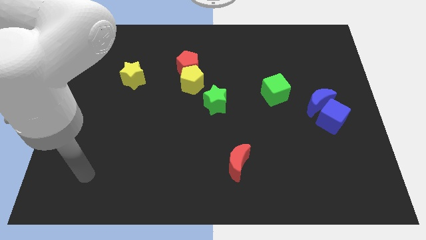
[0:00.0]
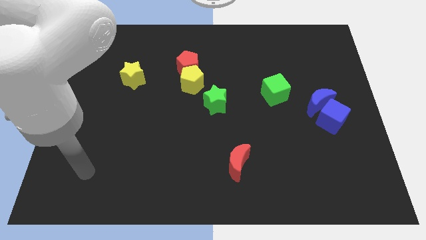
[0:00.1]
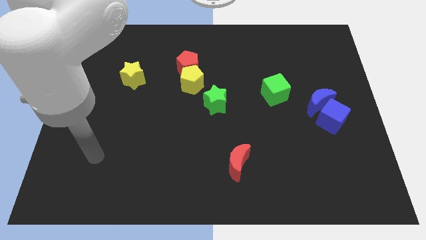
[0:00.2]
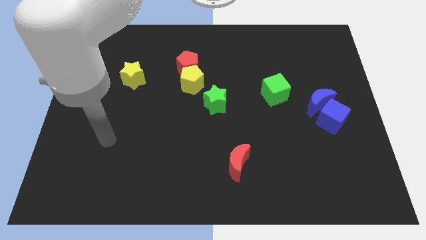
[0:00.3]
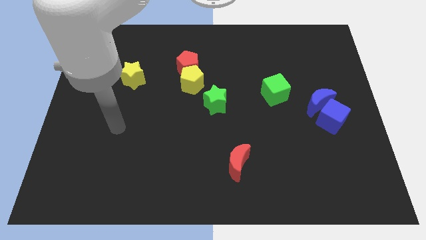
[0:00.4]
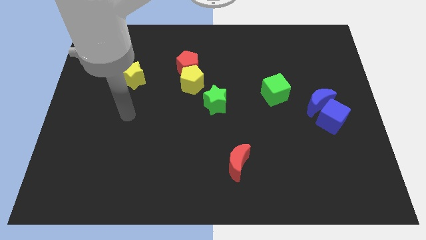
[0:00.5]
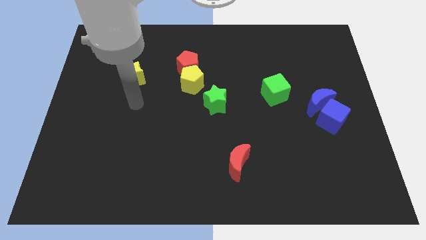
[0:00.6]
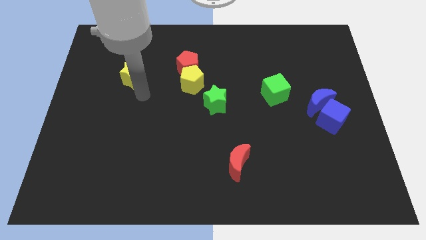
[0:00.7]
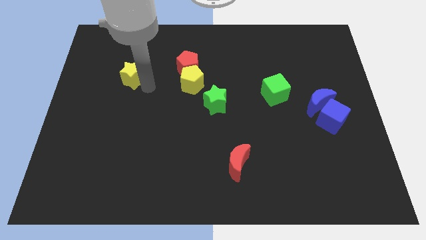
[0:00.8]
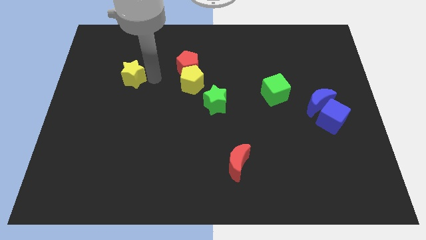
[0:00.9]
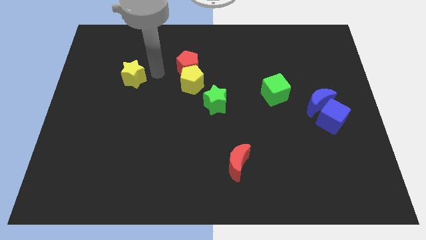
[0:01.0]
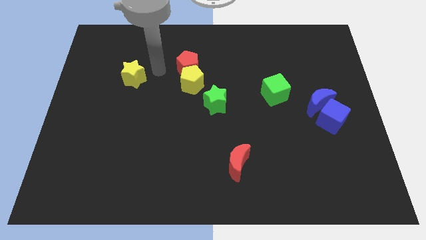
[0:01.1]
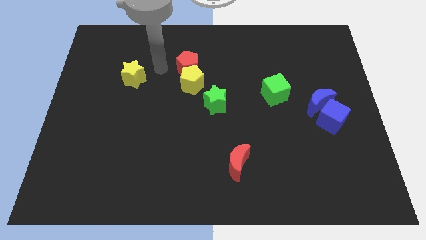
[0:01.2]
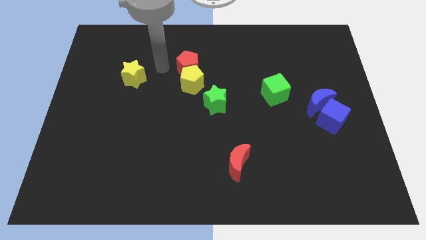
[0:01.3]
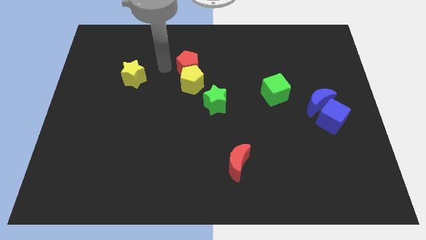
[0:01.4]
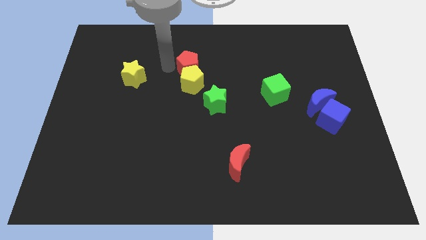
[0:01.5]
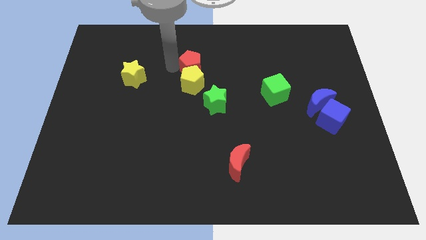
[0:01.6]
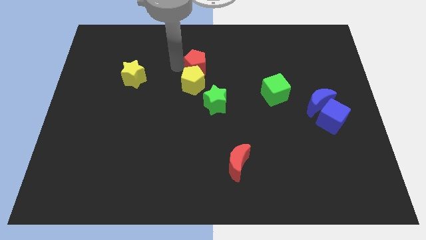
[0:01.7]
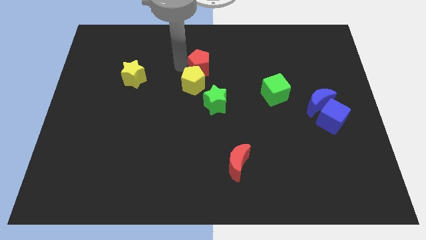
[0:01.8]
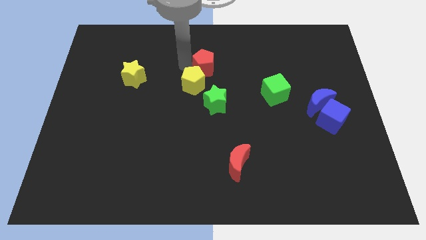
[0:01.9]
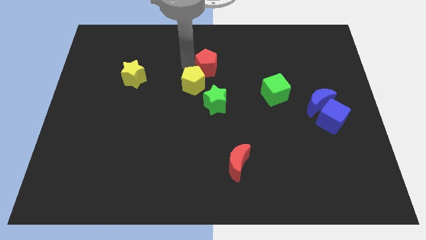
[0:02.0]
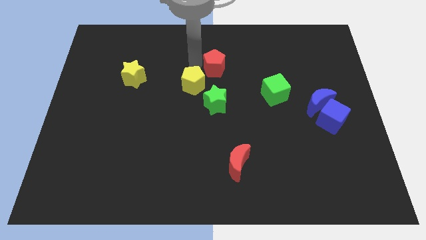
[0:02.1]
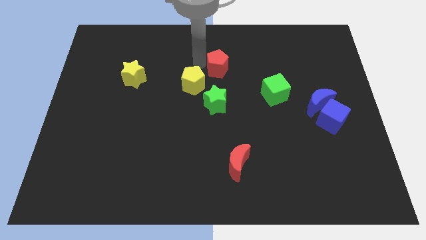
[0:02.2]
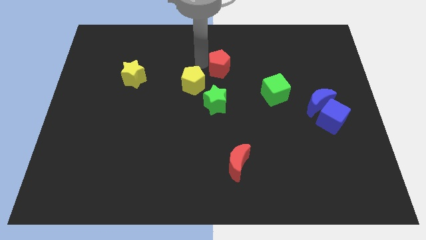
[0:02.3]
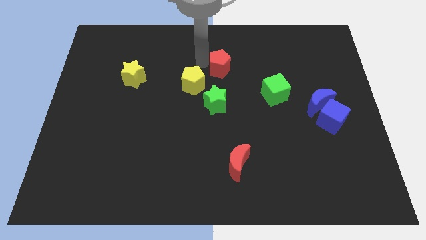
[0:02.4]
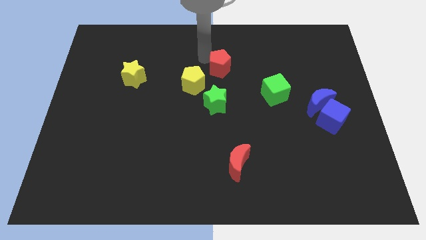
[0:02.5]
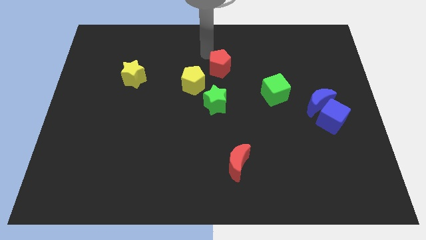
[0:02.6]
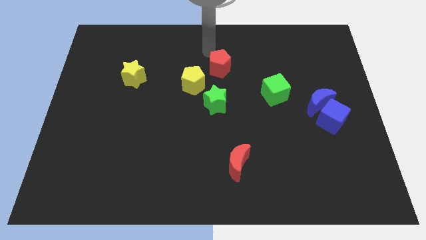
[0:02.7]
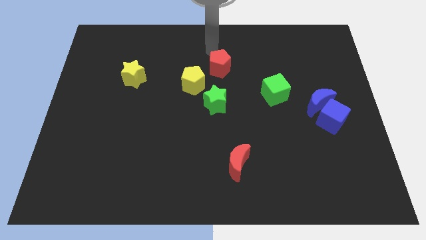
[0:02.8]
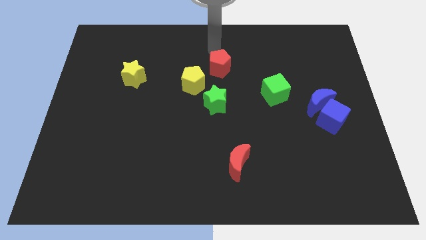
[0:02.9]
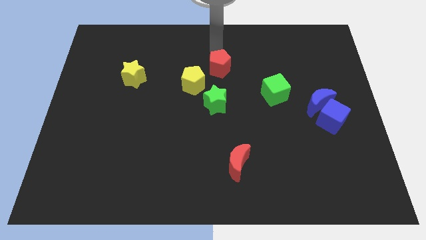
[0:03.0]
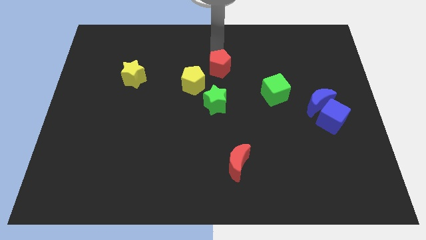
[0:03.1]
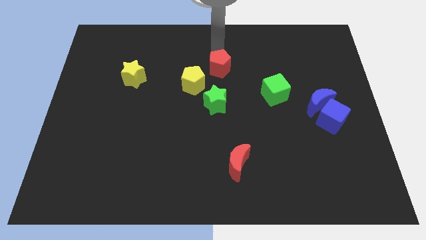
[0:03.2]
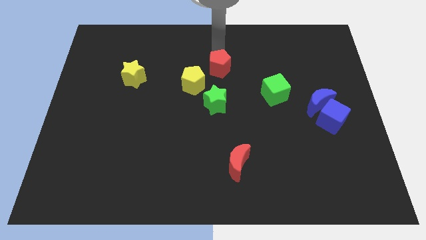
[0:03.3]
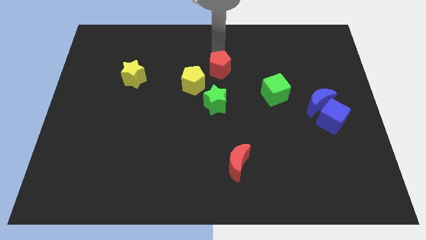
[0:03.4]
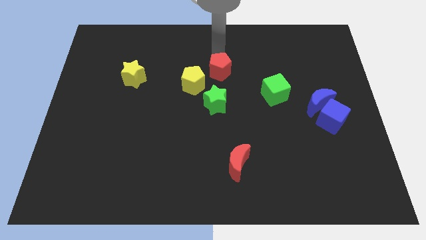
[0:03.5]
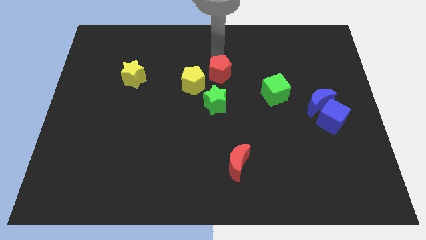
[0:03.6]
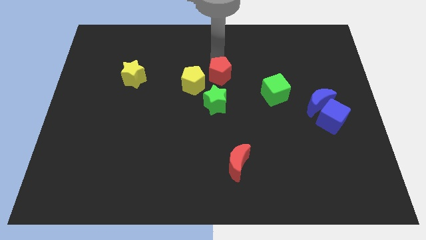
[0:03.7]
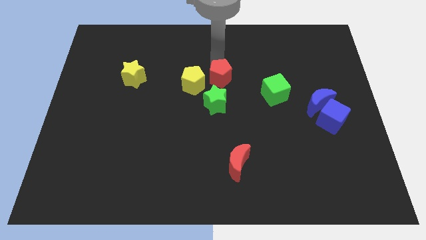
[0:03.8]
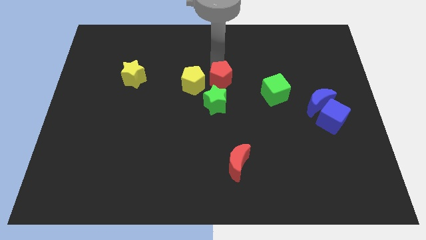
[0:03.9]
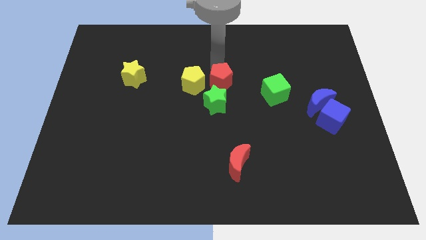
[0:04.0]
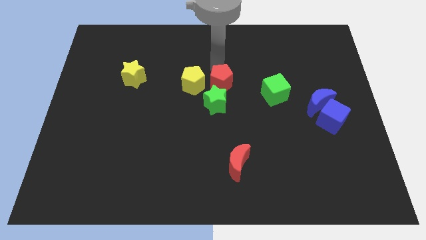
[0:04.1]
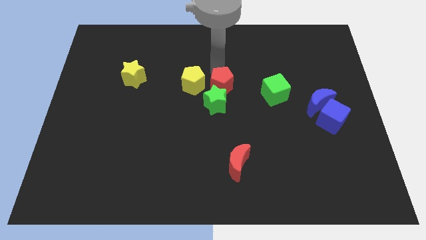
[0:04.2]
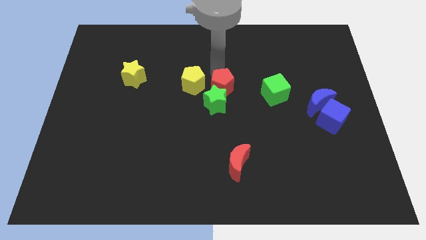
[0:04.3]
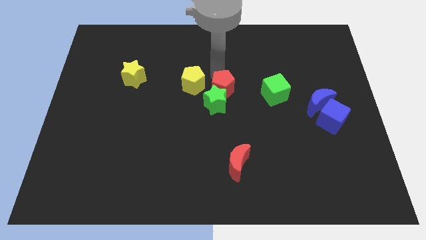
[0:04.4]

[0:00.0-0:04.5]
push the red pentagon to the green star

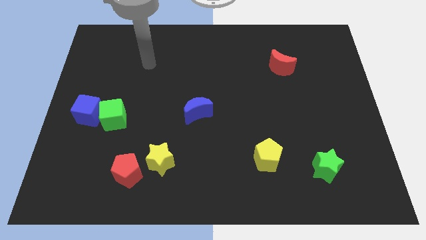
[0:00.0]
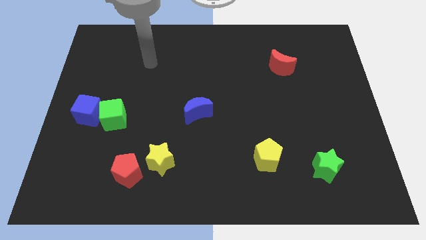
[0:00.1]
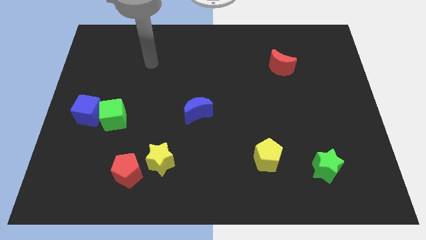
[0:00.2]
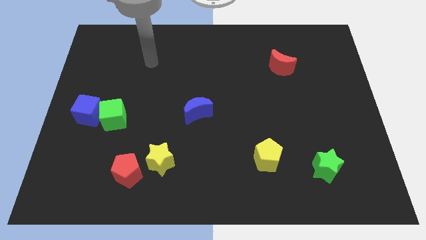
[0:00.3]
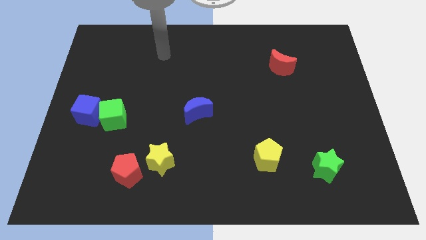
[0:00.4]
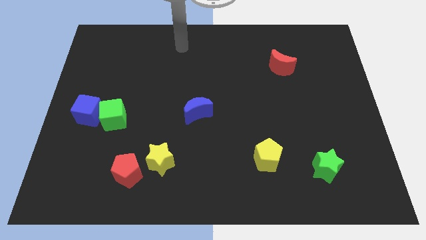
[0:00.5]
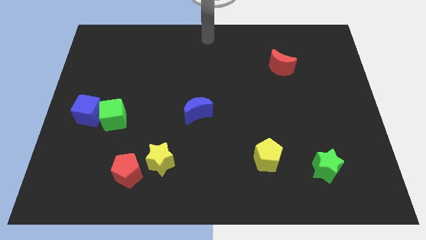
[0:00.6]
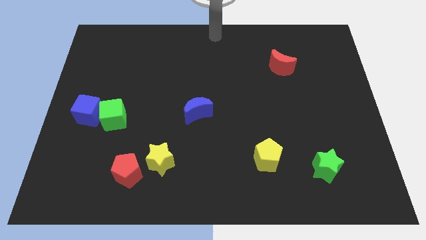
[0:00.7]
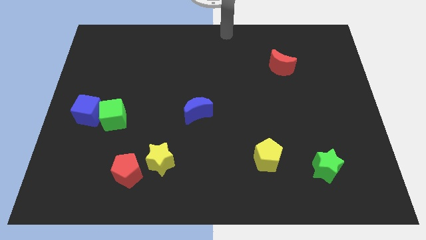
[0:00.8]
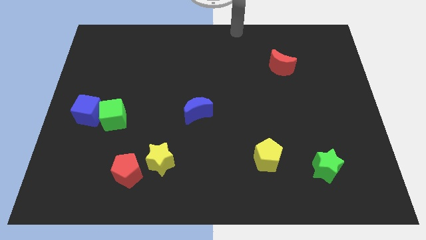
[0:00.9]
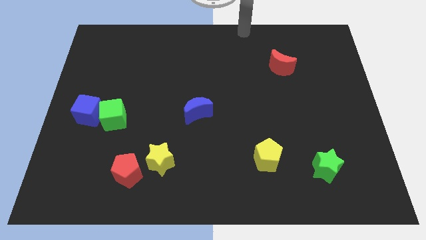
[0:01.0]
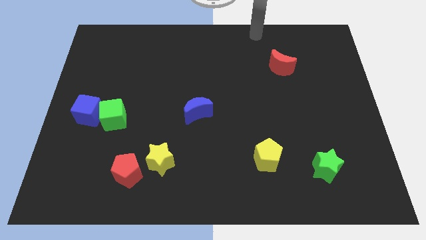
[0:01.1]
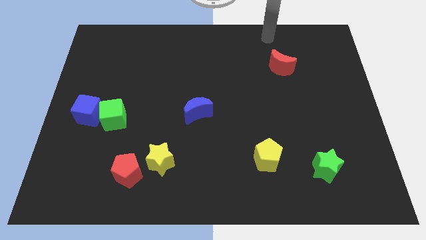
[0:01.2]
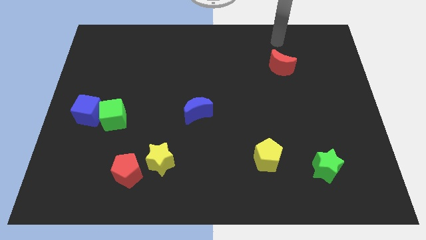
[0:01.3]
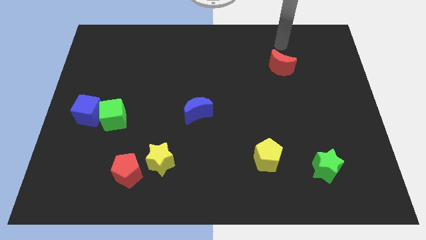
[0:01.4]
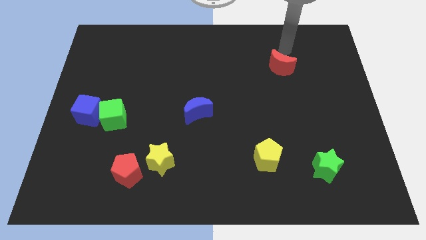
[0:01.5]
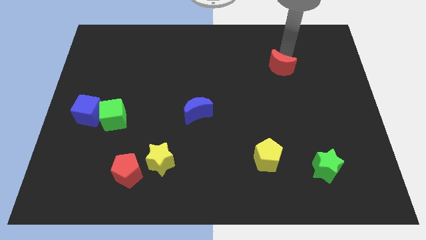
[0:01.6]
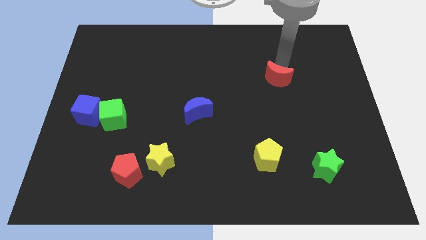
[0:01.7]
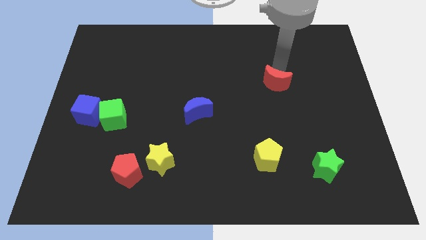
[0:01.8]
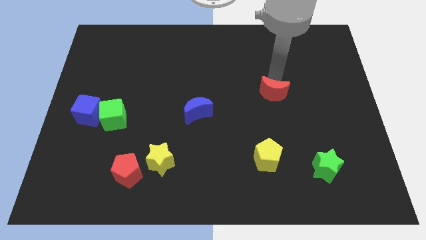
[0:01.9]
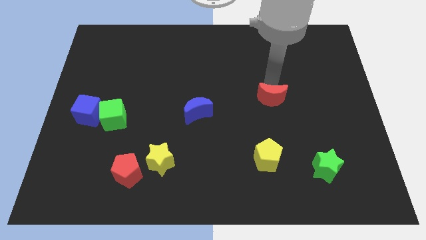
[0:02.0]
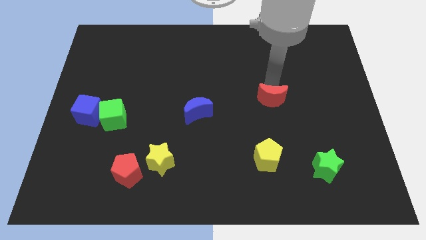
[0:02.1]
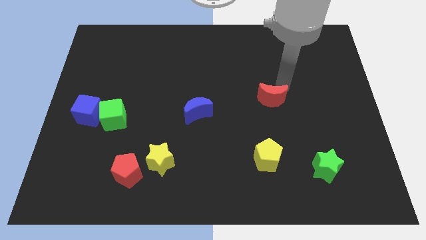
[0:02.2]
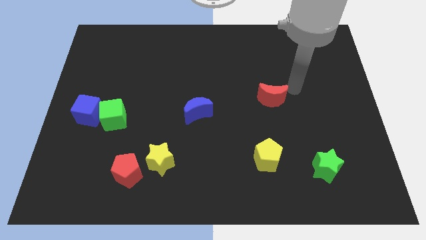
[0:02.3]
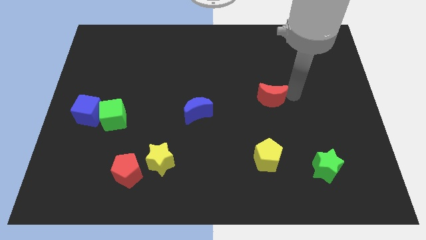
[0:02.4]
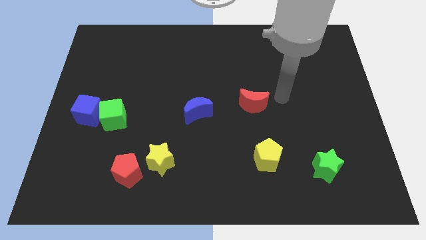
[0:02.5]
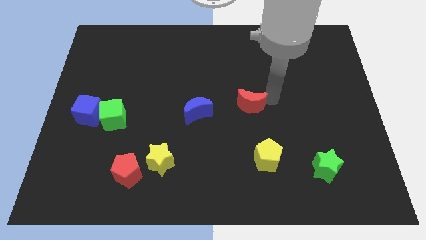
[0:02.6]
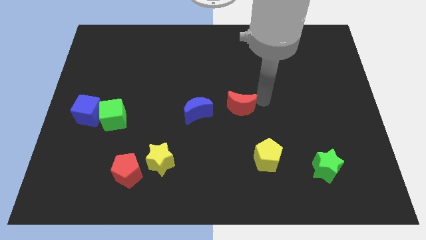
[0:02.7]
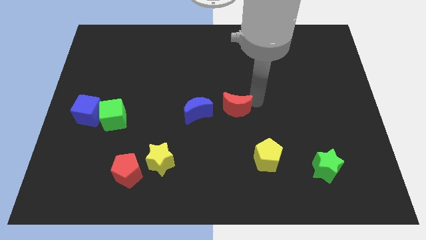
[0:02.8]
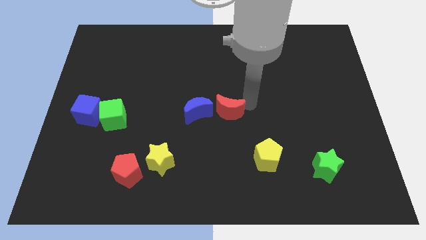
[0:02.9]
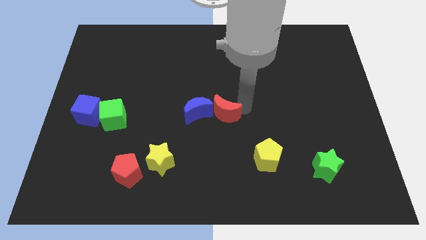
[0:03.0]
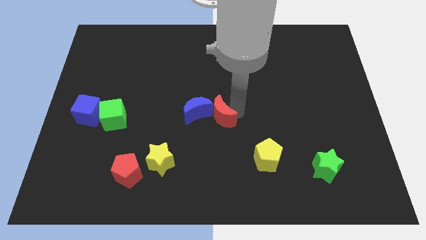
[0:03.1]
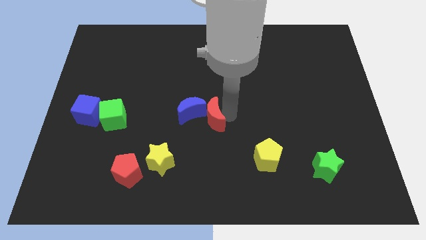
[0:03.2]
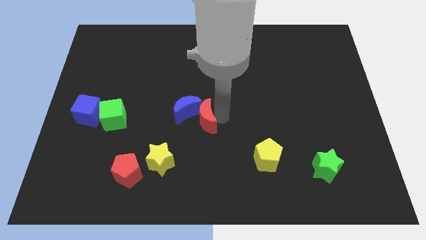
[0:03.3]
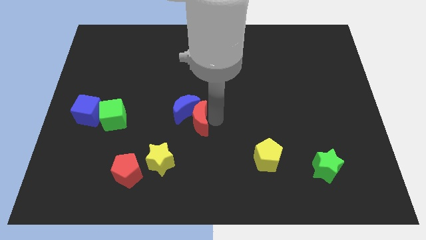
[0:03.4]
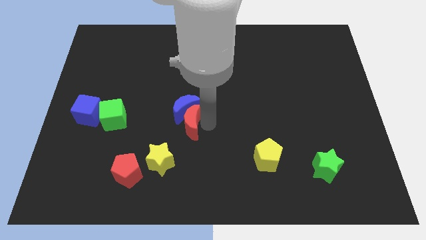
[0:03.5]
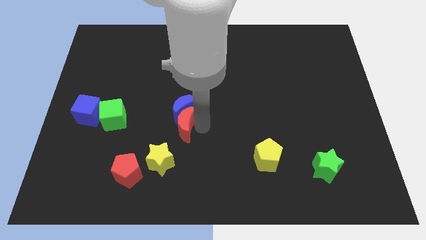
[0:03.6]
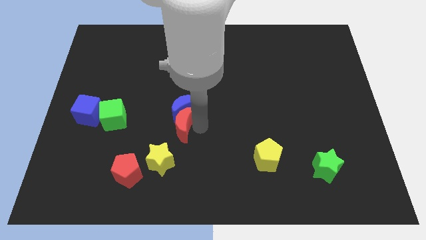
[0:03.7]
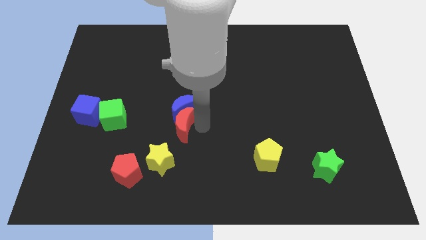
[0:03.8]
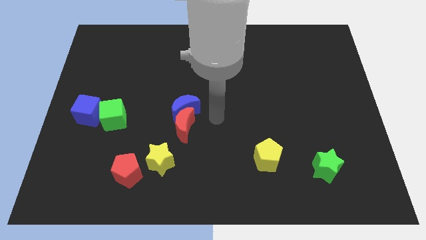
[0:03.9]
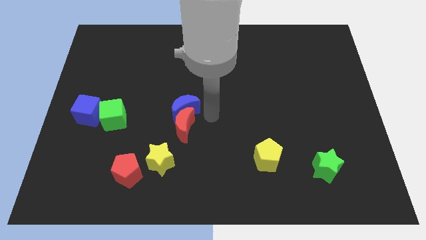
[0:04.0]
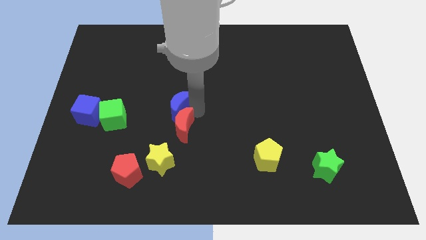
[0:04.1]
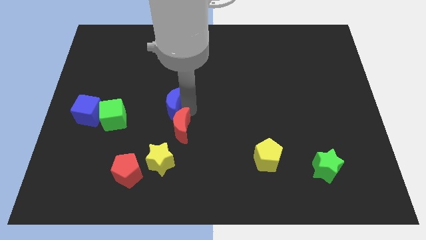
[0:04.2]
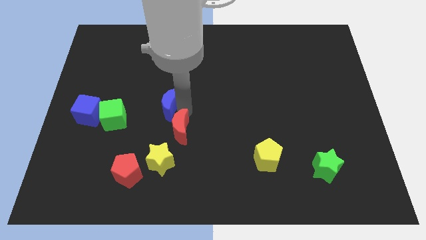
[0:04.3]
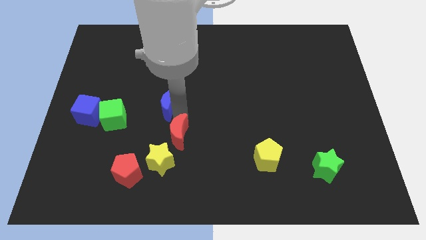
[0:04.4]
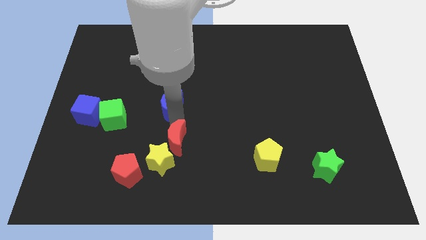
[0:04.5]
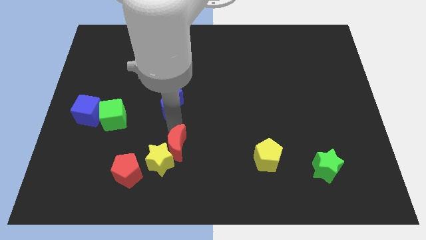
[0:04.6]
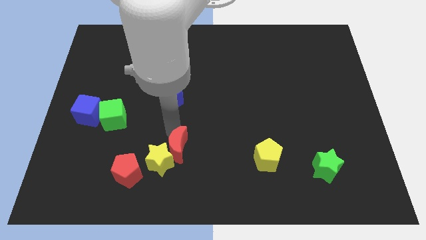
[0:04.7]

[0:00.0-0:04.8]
slide the red moon next to the yellow star
